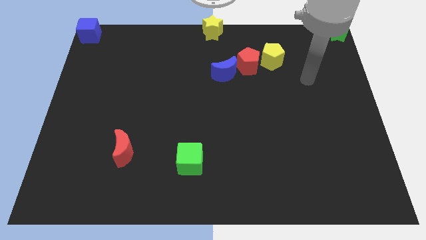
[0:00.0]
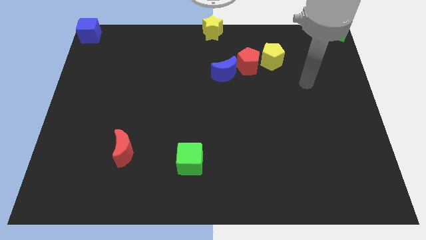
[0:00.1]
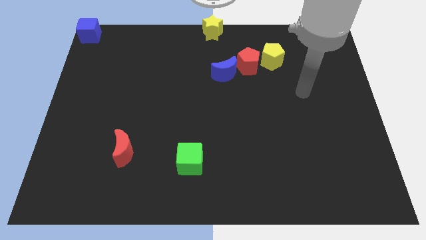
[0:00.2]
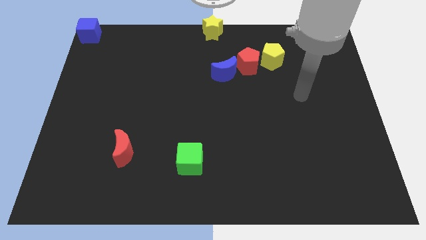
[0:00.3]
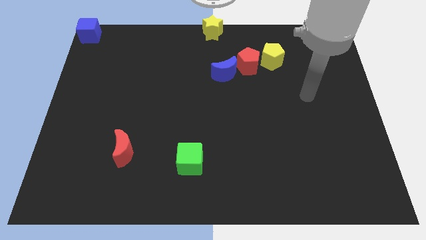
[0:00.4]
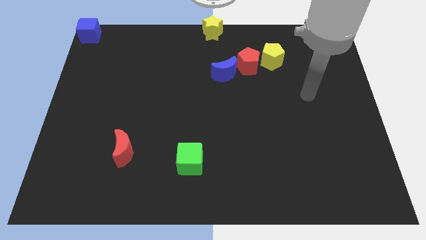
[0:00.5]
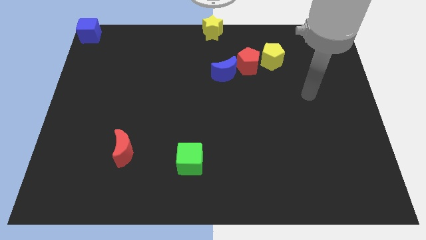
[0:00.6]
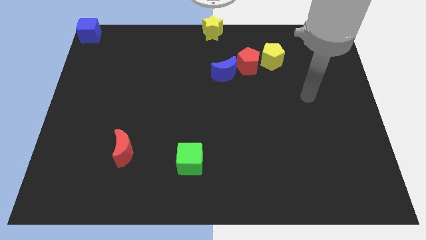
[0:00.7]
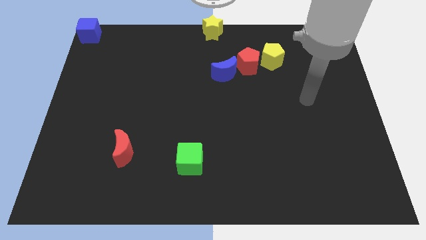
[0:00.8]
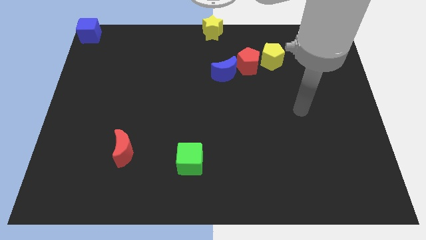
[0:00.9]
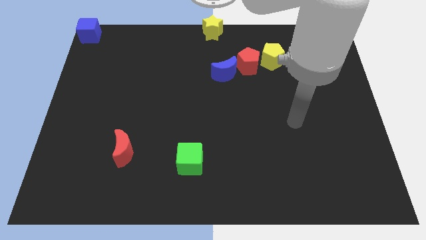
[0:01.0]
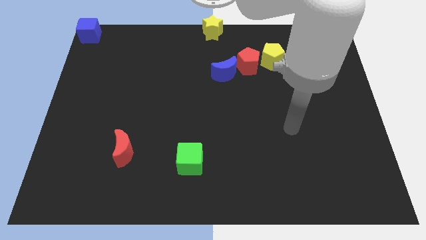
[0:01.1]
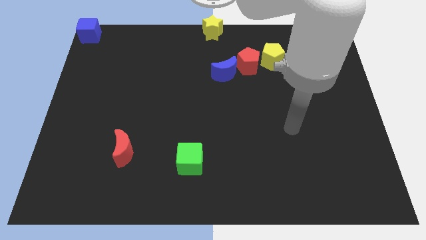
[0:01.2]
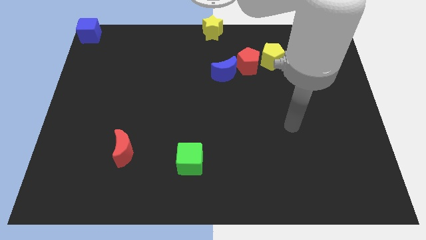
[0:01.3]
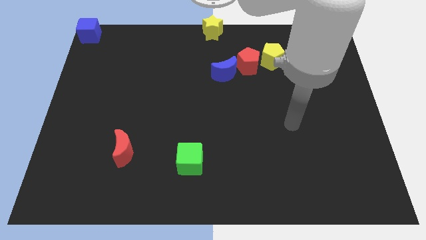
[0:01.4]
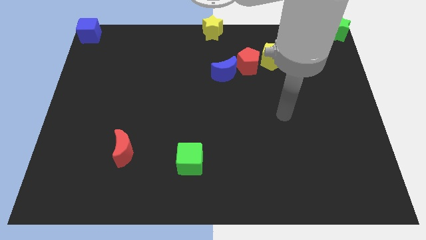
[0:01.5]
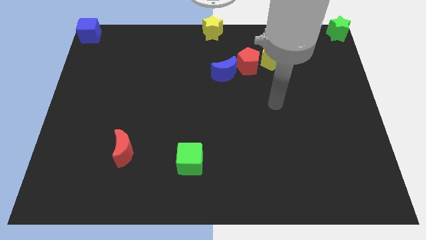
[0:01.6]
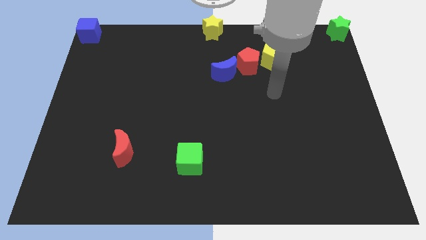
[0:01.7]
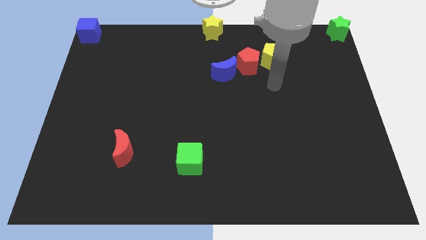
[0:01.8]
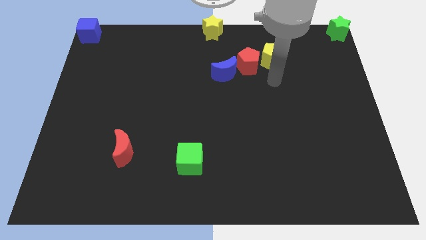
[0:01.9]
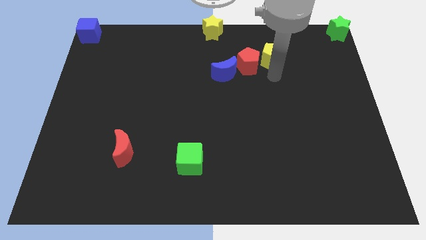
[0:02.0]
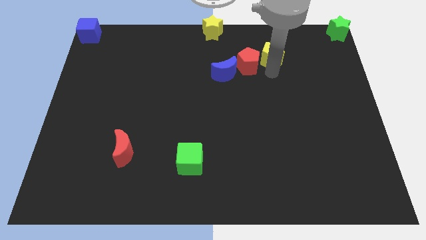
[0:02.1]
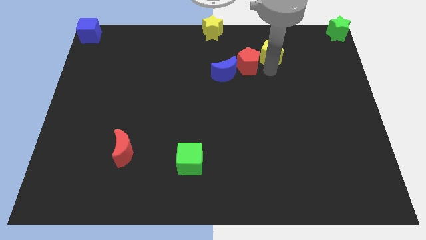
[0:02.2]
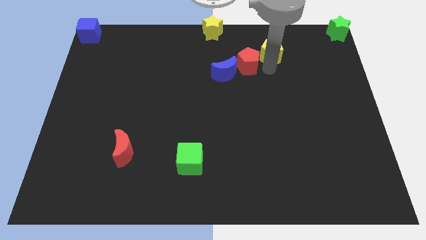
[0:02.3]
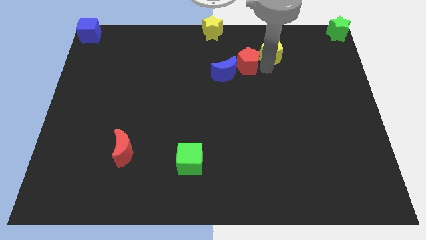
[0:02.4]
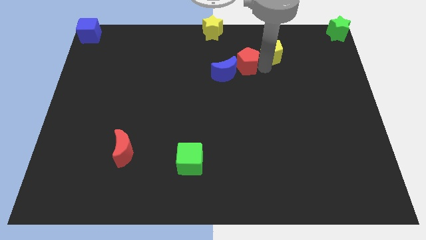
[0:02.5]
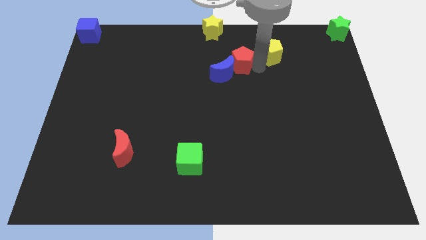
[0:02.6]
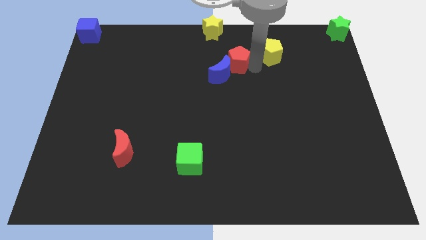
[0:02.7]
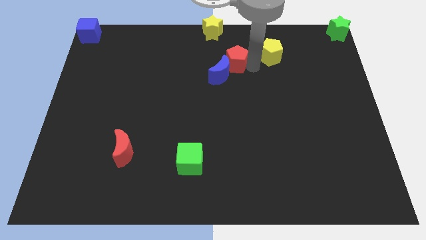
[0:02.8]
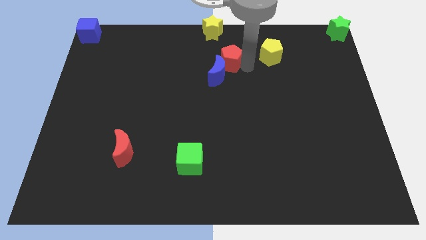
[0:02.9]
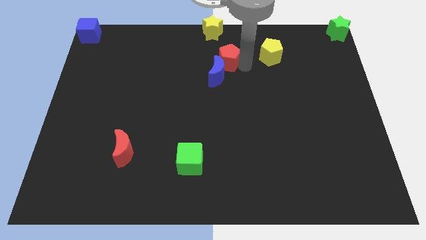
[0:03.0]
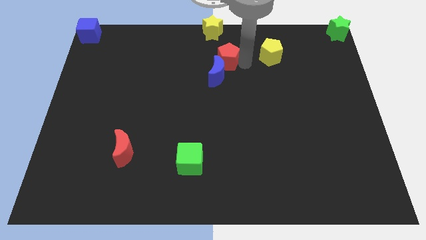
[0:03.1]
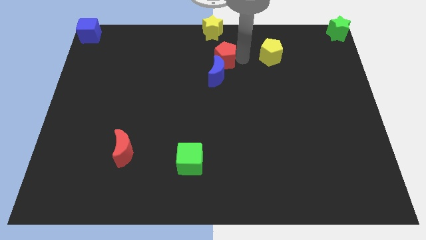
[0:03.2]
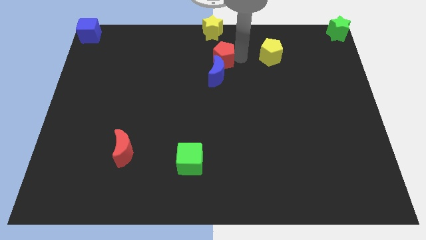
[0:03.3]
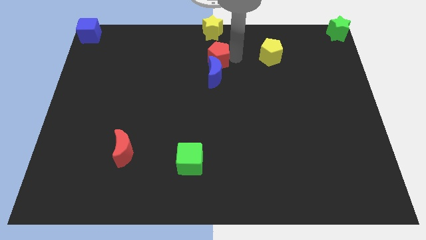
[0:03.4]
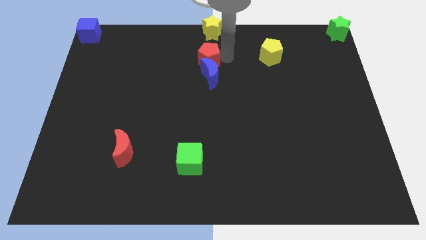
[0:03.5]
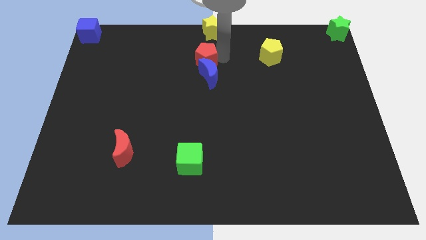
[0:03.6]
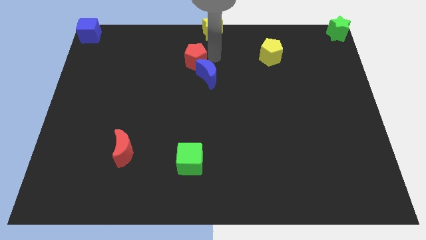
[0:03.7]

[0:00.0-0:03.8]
push blue crescent with red pentagon

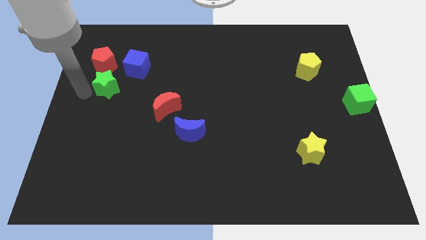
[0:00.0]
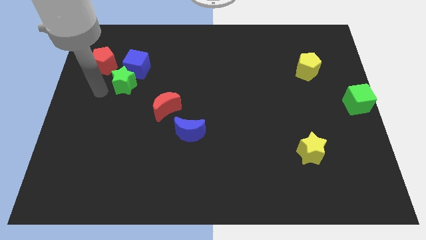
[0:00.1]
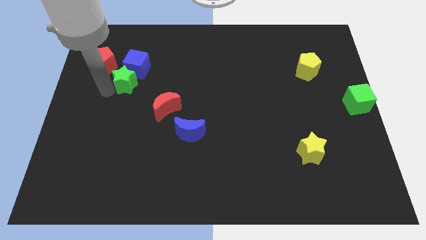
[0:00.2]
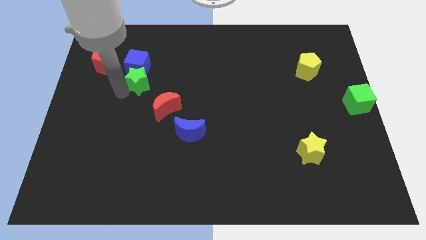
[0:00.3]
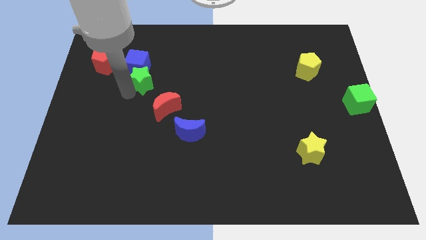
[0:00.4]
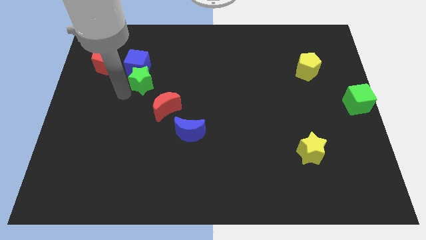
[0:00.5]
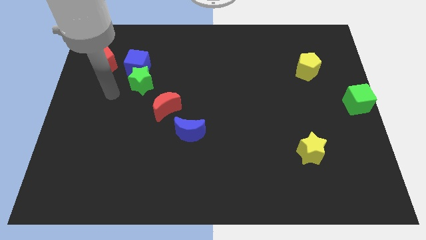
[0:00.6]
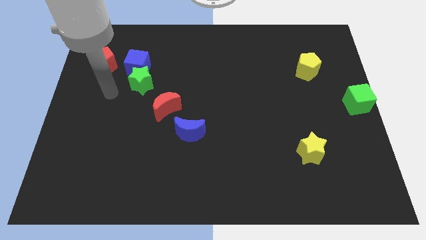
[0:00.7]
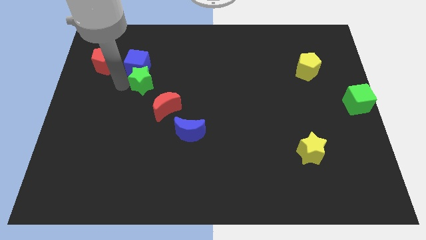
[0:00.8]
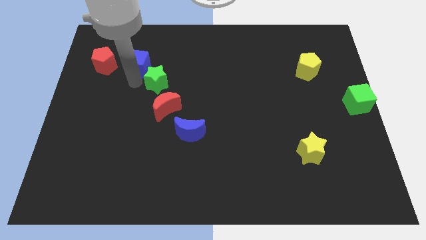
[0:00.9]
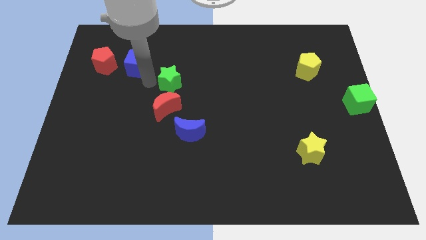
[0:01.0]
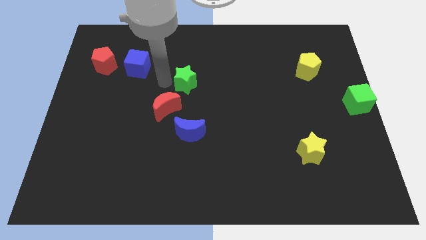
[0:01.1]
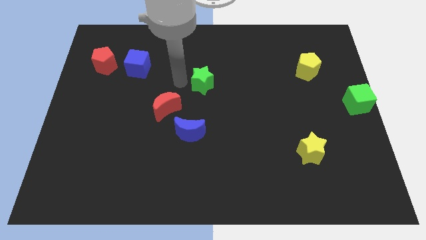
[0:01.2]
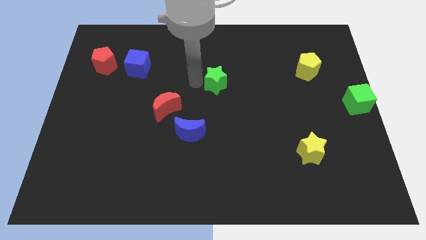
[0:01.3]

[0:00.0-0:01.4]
move the green star to the right of the board

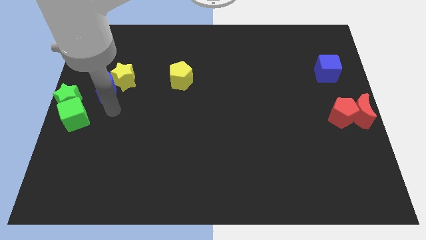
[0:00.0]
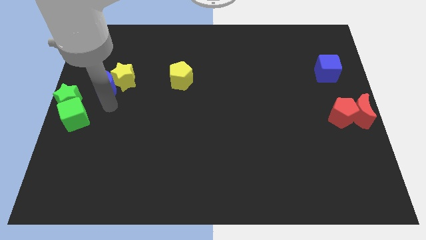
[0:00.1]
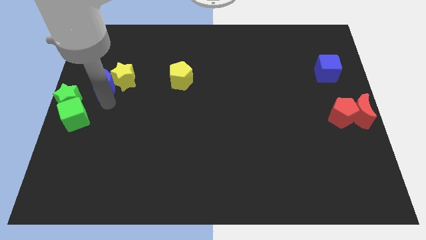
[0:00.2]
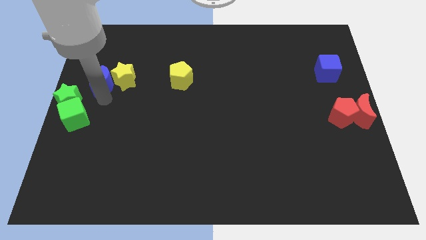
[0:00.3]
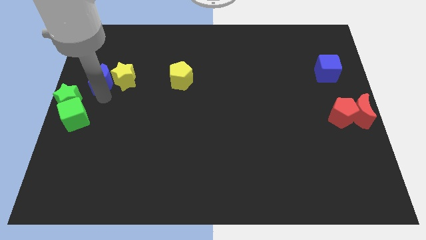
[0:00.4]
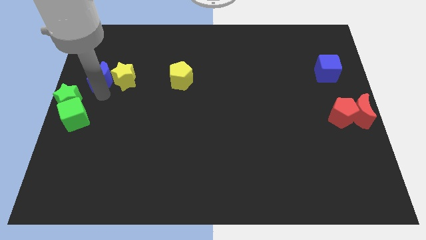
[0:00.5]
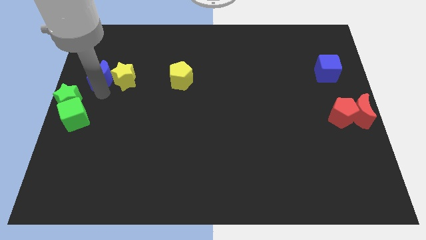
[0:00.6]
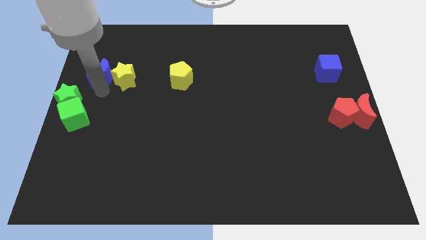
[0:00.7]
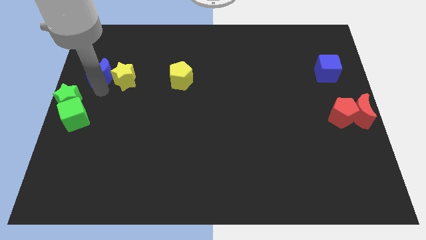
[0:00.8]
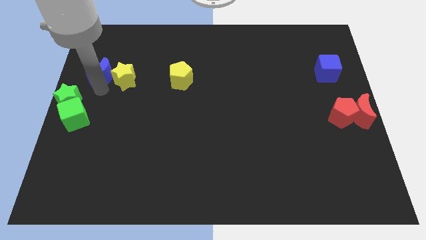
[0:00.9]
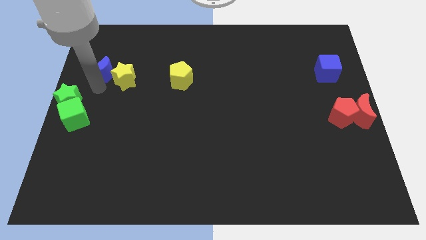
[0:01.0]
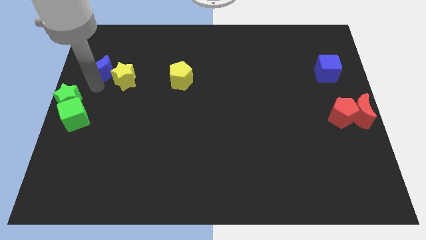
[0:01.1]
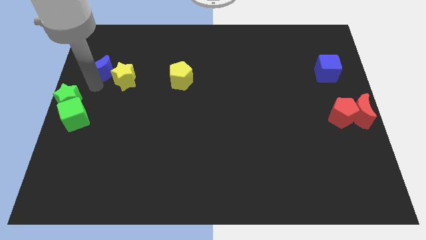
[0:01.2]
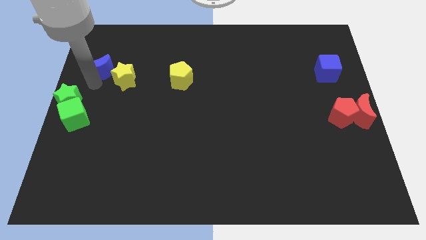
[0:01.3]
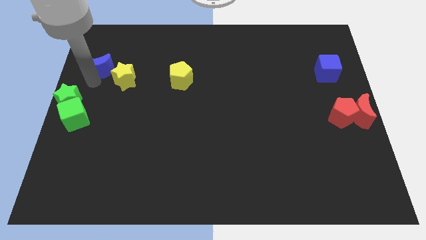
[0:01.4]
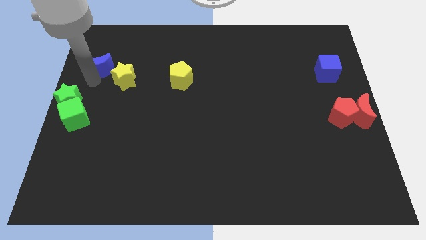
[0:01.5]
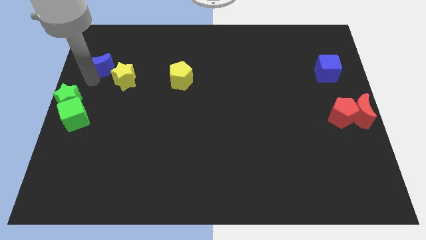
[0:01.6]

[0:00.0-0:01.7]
move the blue moon towards the top

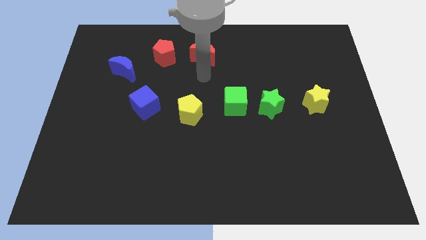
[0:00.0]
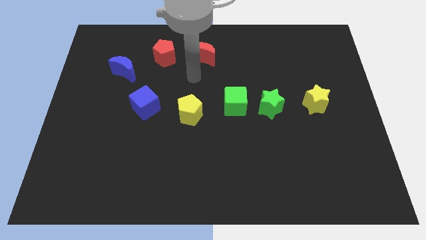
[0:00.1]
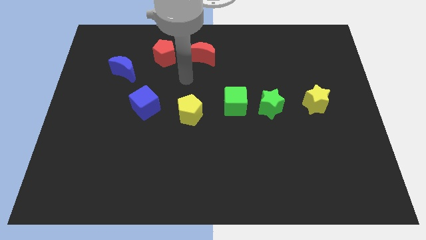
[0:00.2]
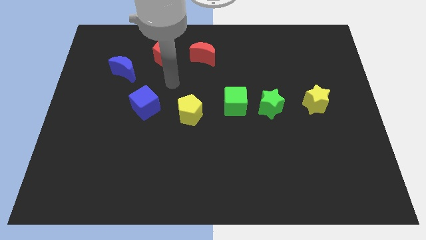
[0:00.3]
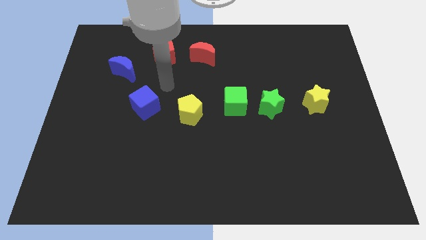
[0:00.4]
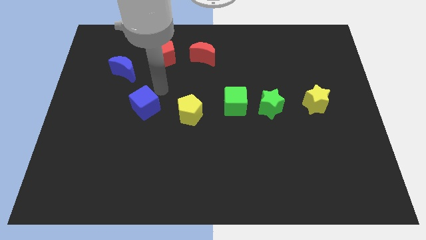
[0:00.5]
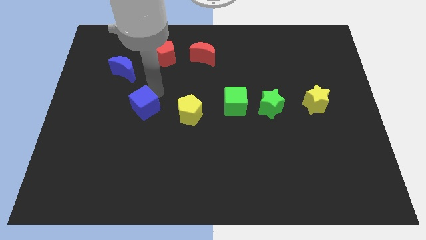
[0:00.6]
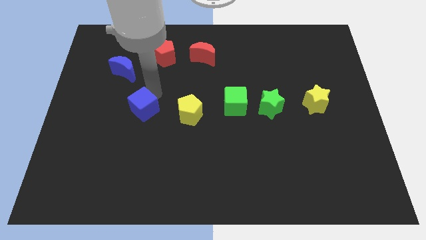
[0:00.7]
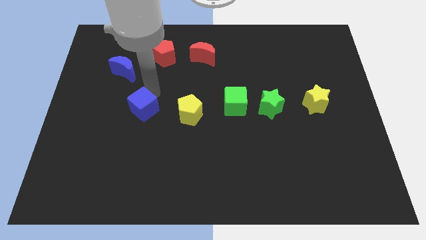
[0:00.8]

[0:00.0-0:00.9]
tap the blue cube

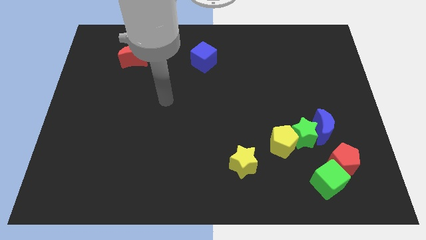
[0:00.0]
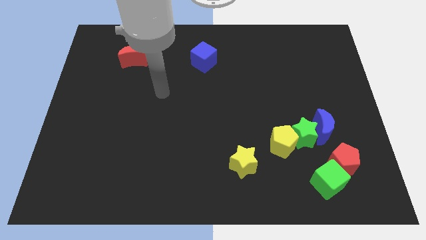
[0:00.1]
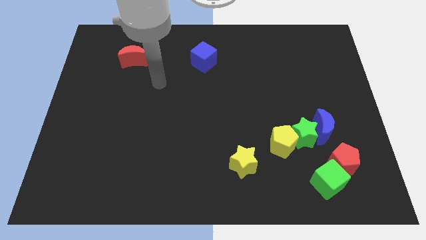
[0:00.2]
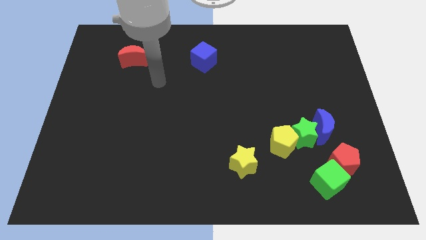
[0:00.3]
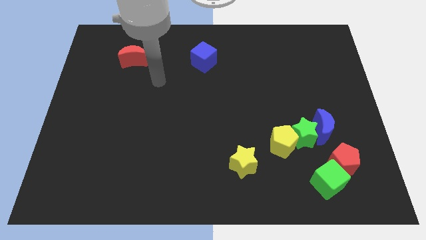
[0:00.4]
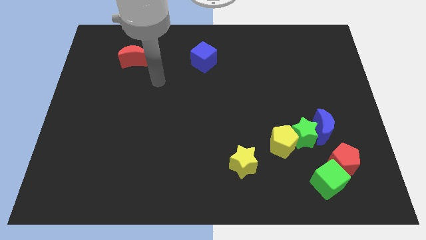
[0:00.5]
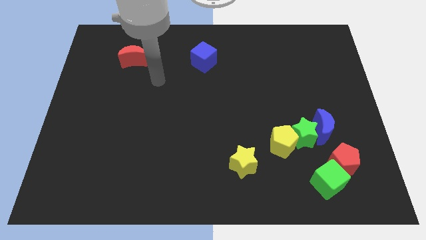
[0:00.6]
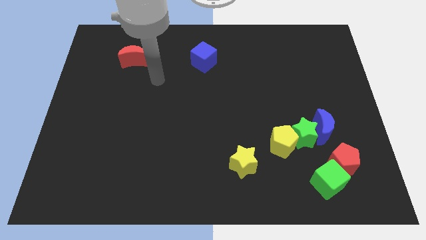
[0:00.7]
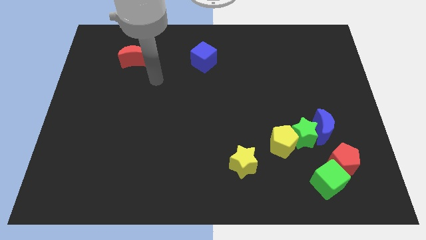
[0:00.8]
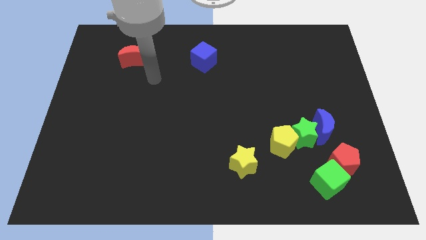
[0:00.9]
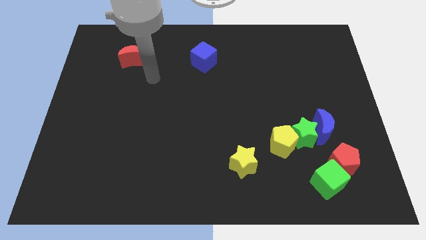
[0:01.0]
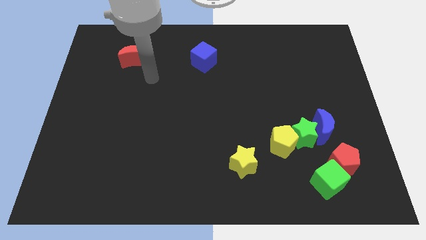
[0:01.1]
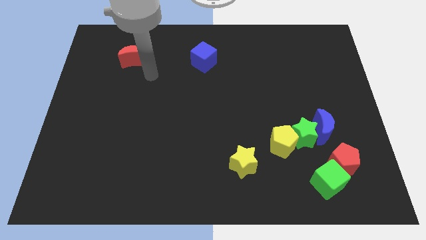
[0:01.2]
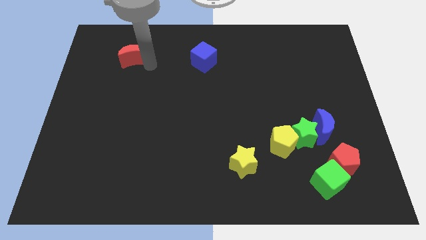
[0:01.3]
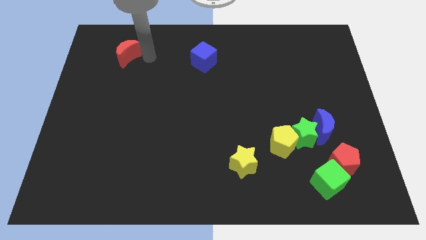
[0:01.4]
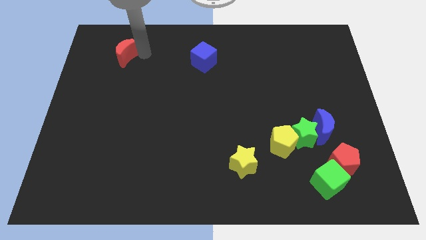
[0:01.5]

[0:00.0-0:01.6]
push the red moon slightly
